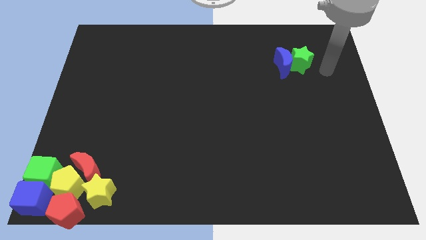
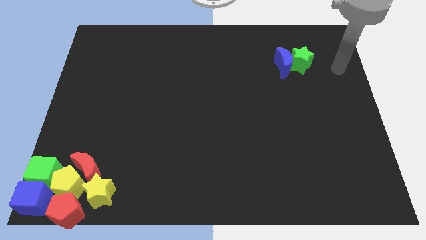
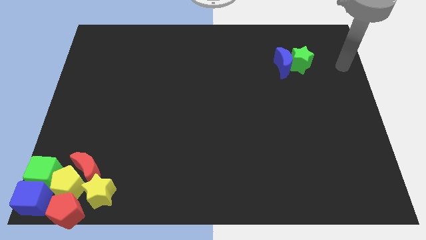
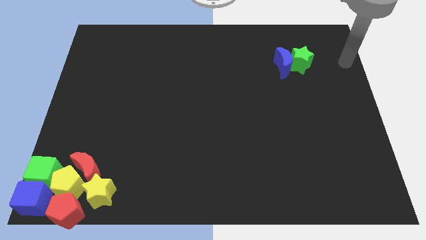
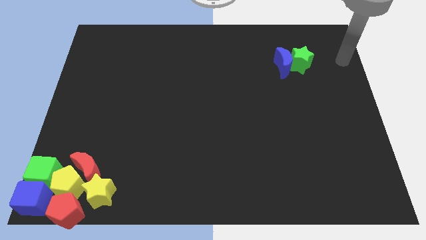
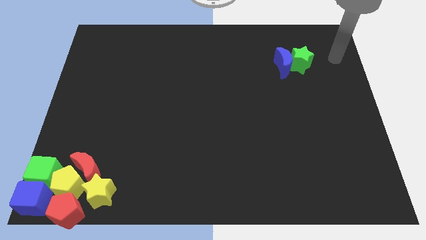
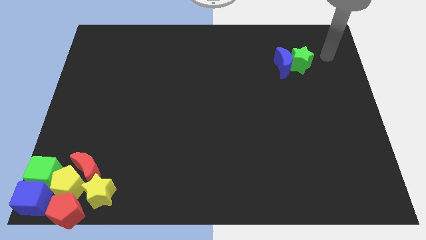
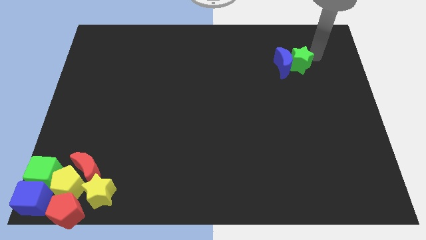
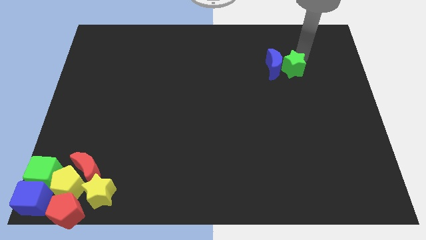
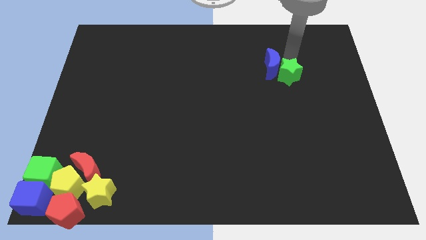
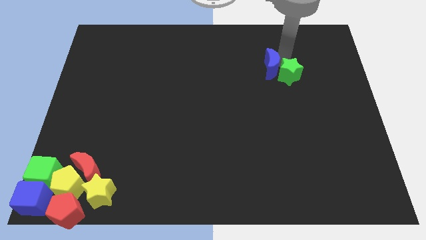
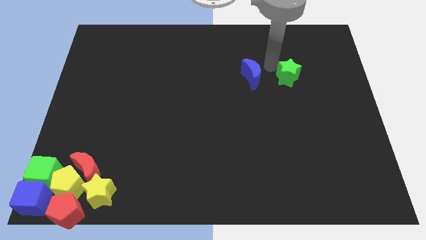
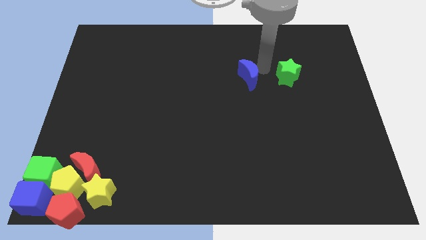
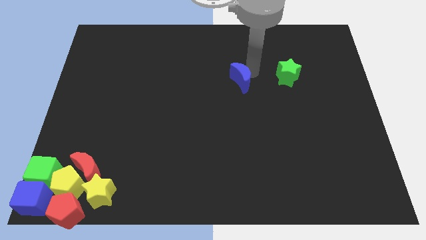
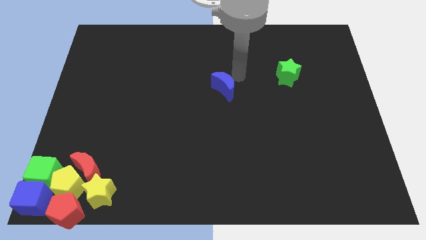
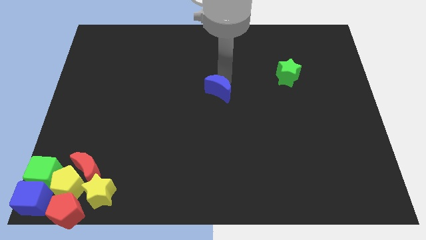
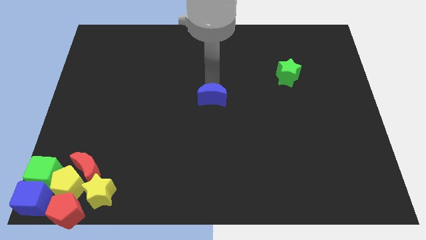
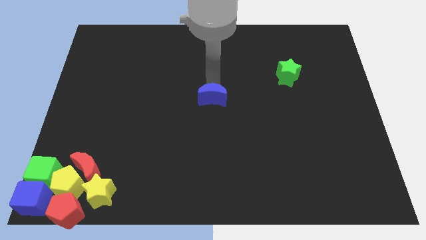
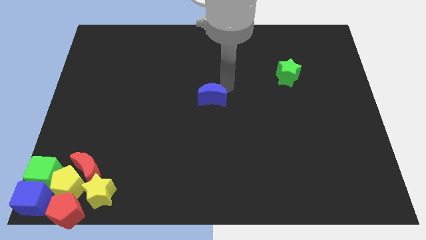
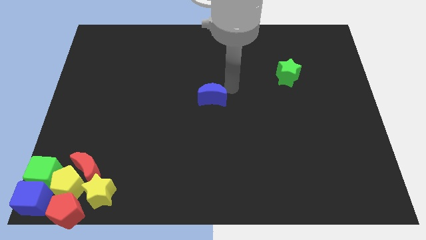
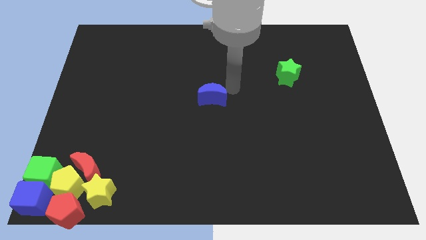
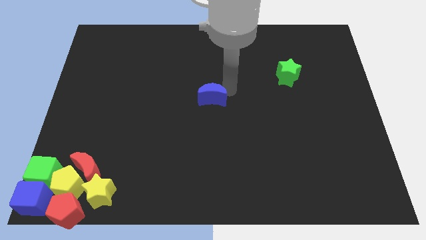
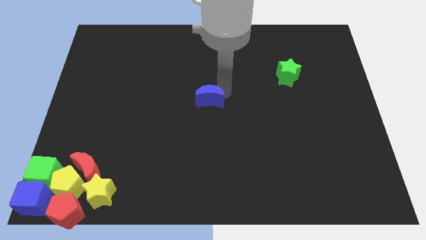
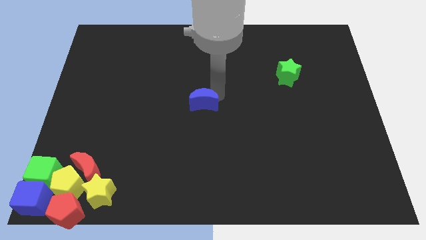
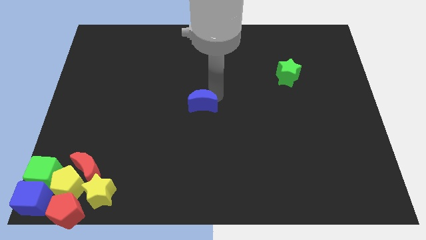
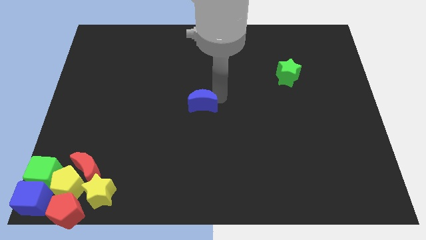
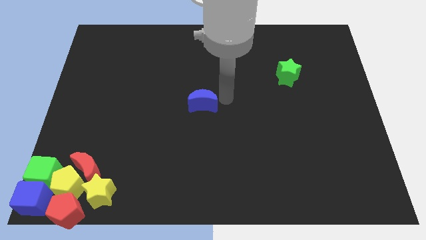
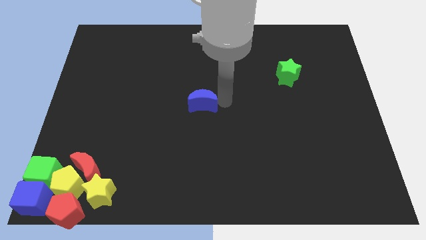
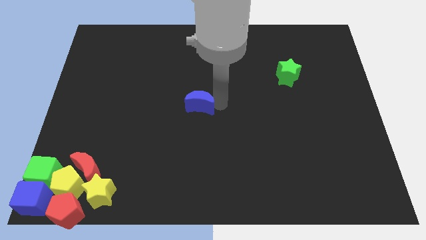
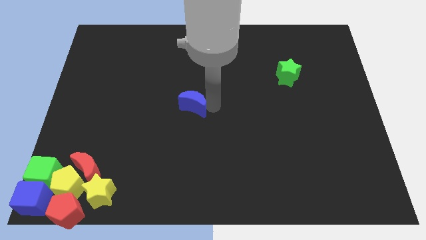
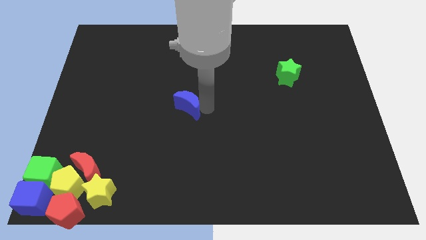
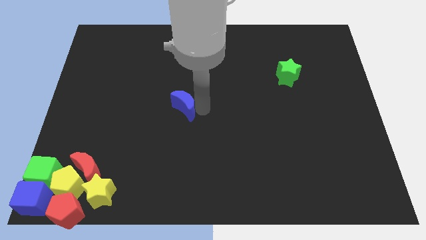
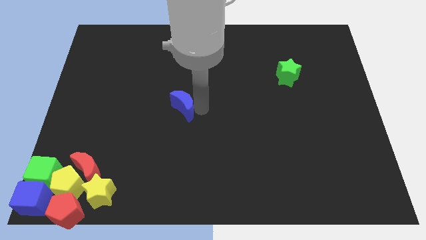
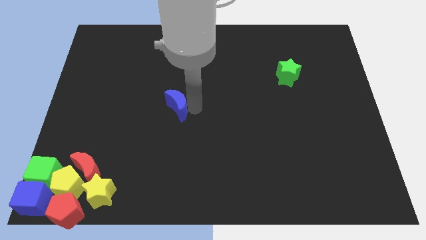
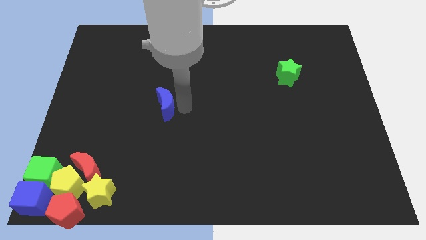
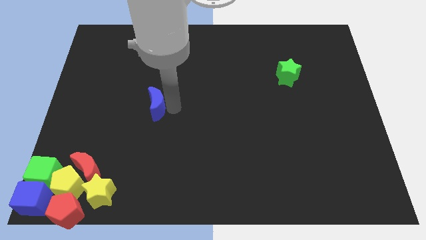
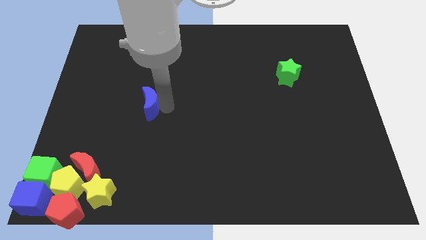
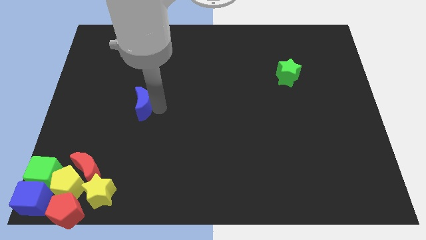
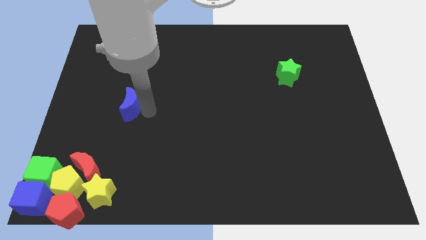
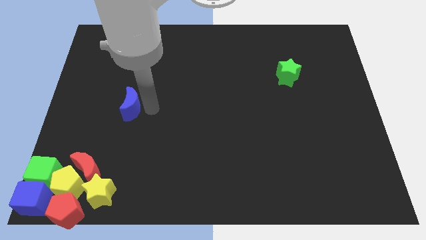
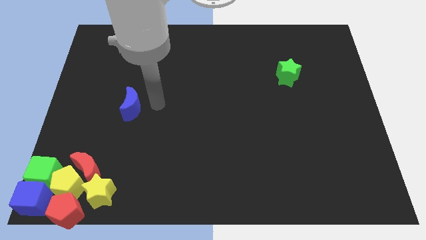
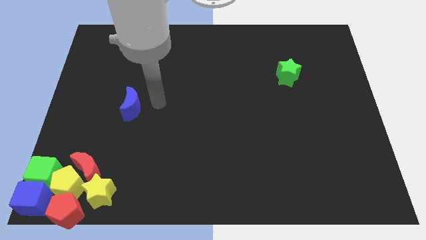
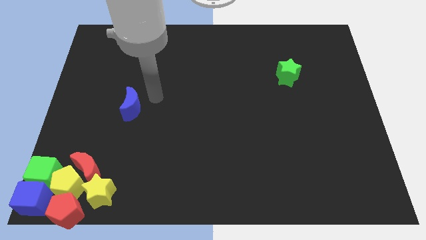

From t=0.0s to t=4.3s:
move the blue crescent parallel to the top of the red crescent

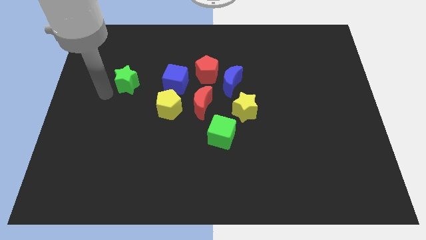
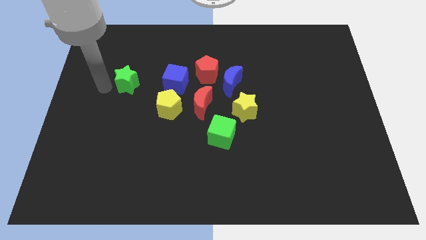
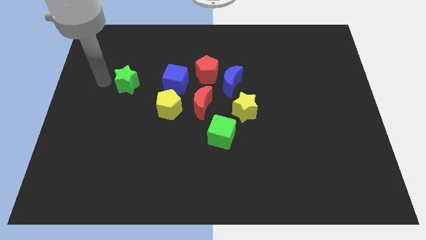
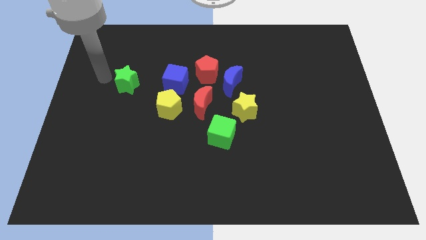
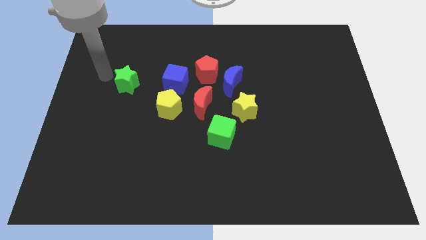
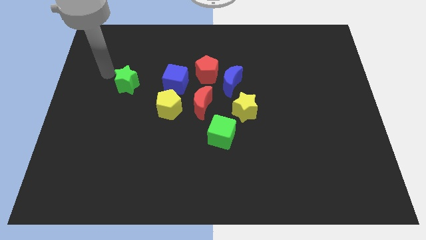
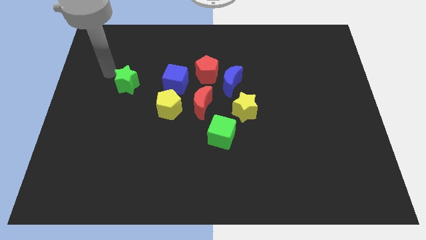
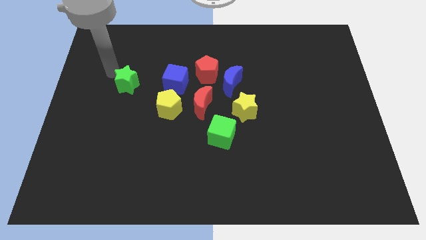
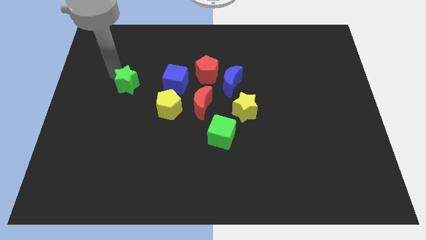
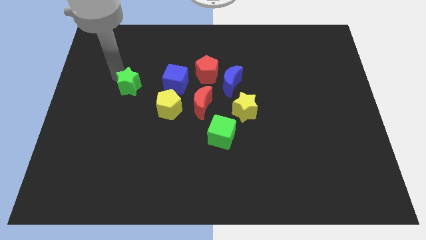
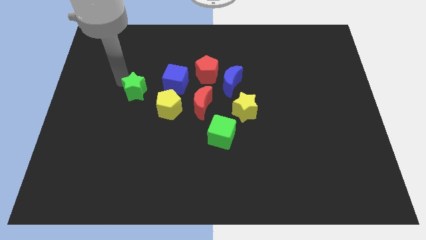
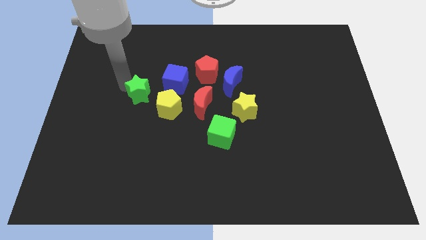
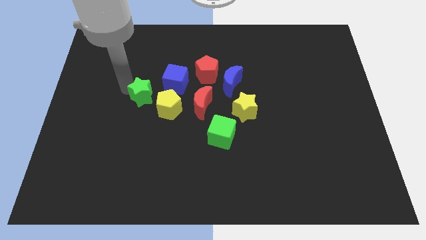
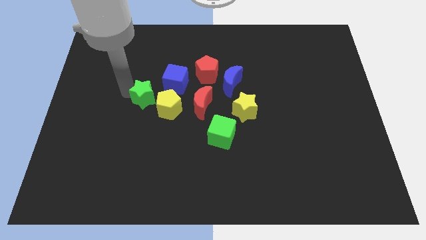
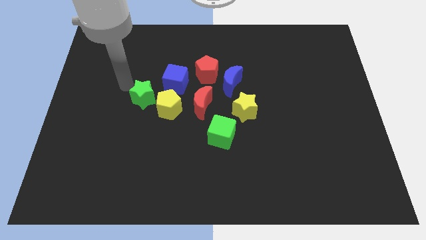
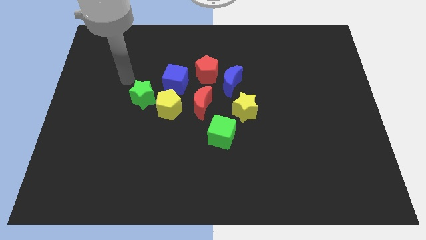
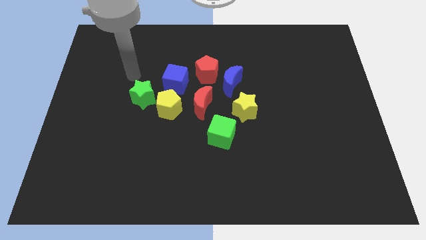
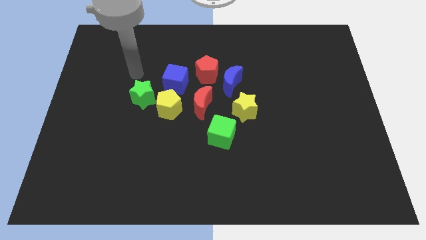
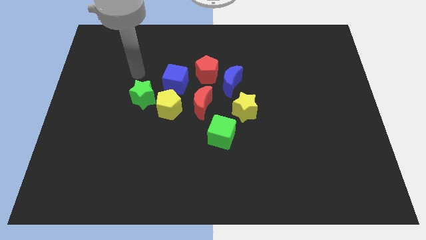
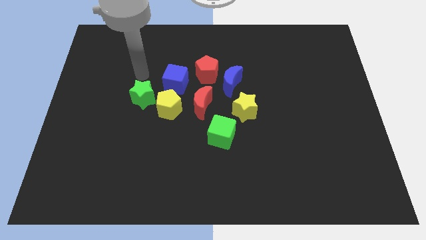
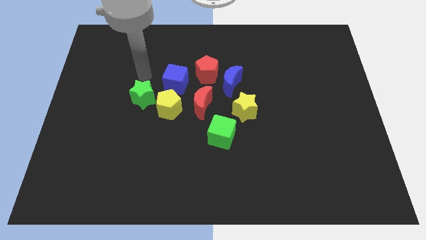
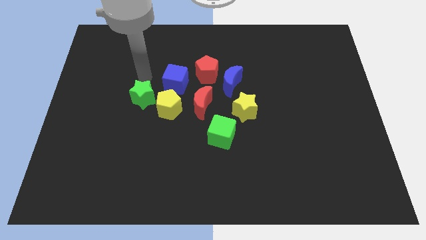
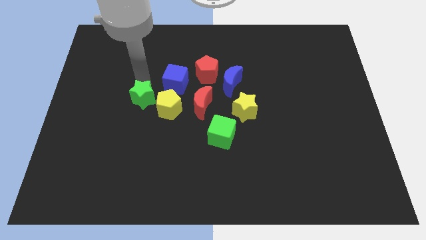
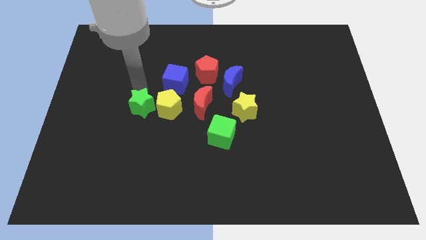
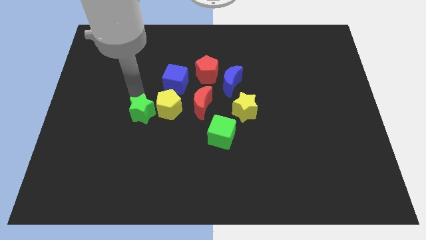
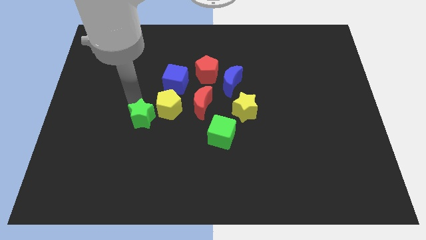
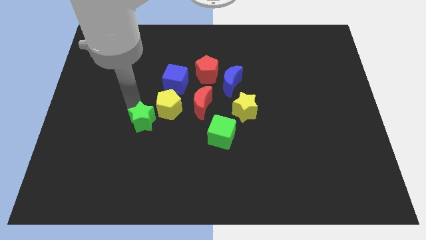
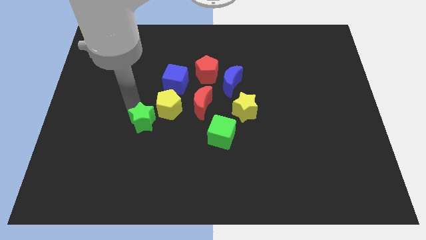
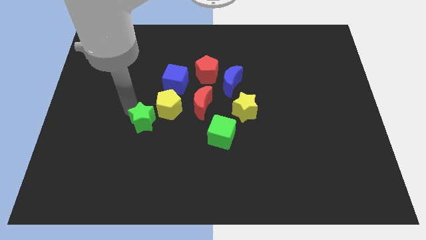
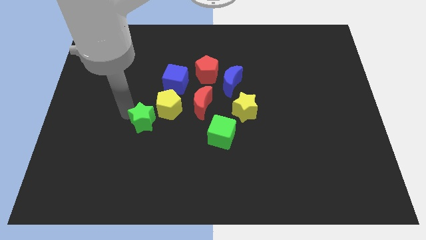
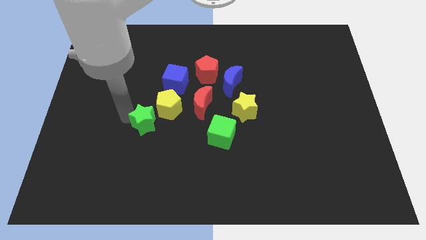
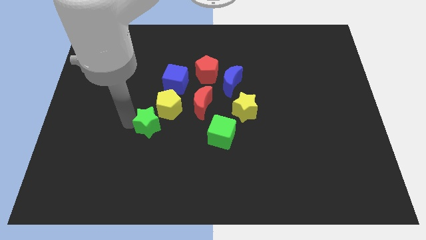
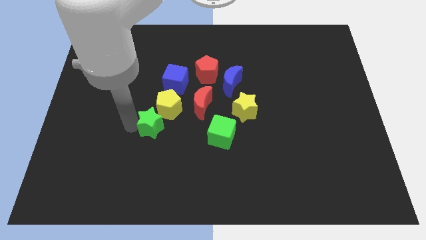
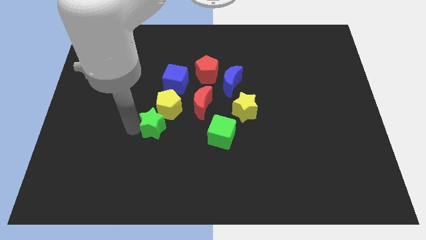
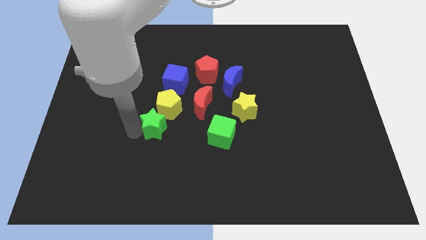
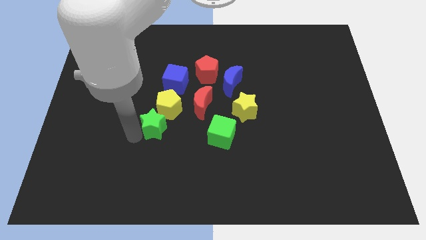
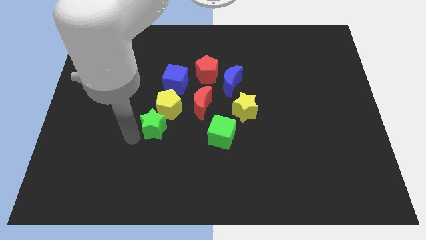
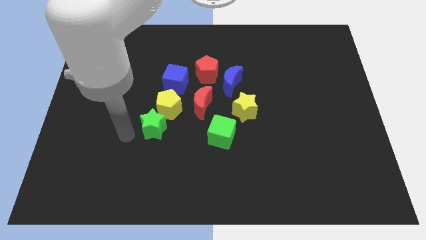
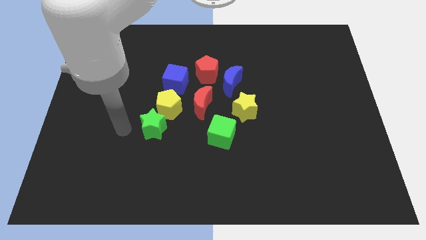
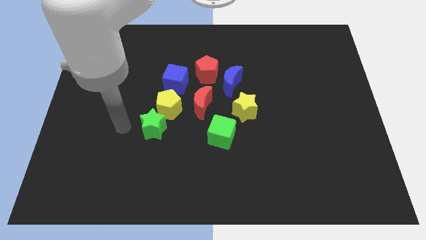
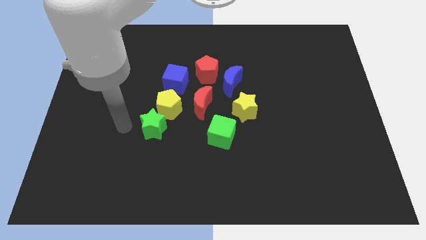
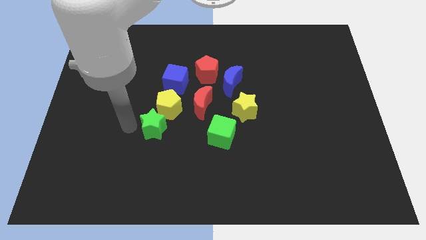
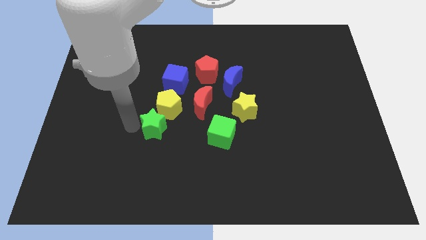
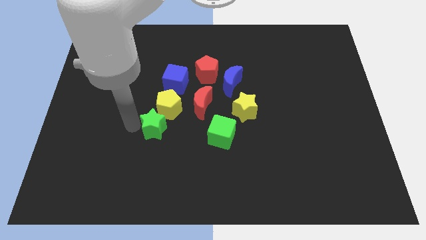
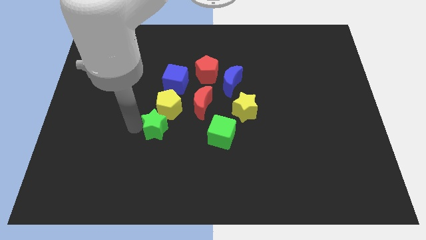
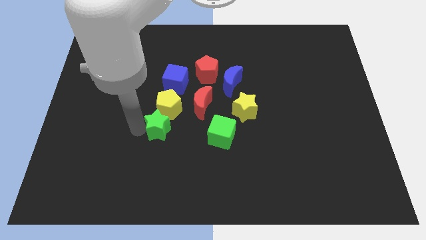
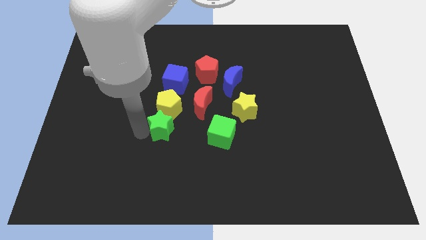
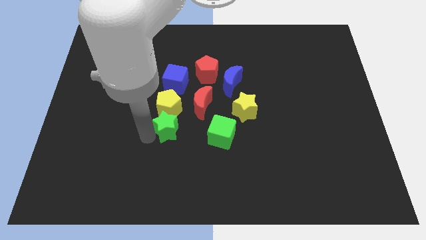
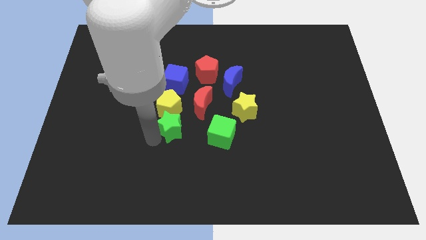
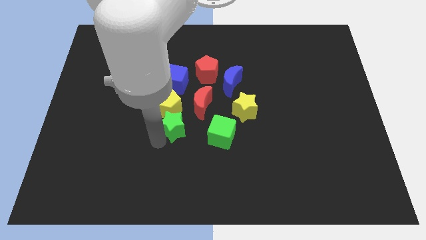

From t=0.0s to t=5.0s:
place the green star below the yellow pentagon to form a vertical line
